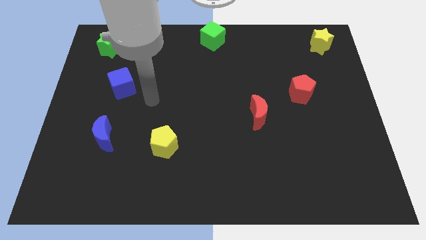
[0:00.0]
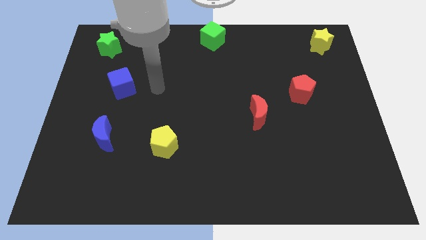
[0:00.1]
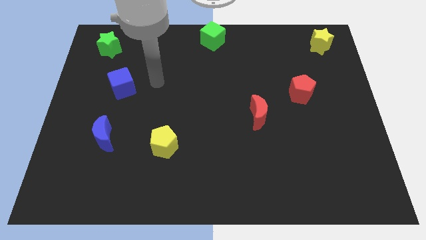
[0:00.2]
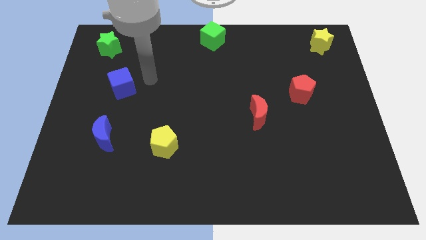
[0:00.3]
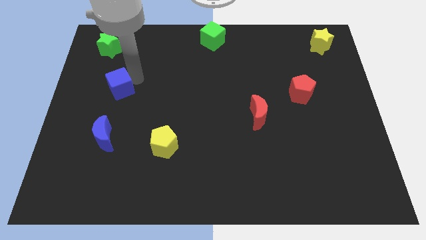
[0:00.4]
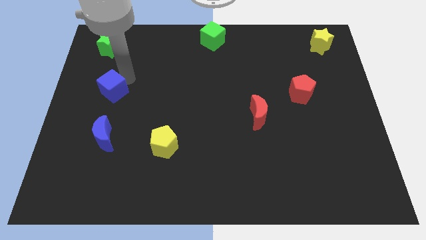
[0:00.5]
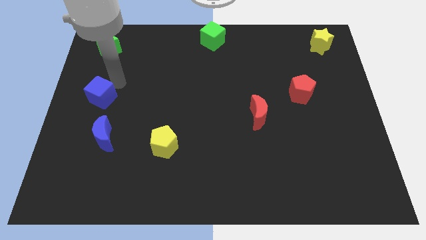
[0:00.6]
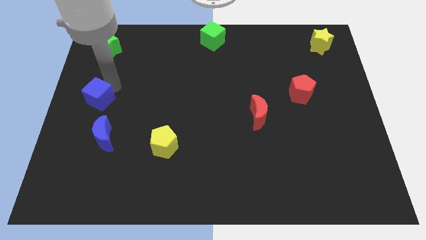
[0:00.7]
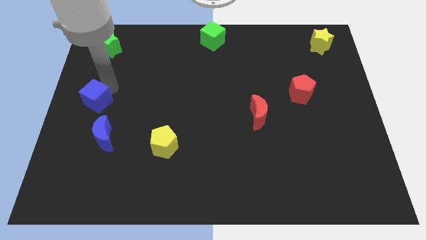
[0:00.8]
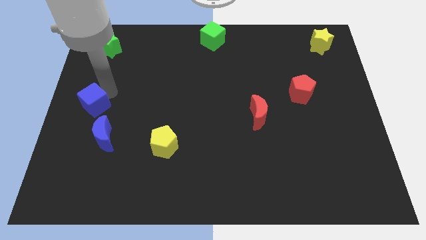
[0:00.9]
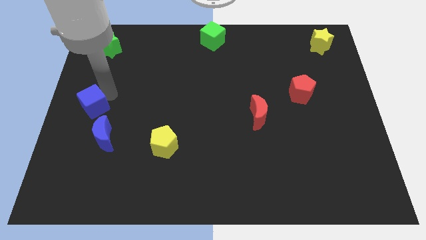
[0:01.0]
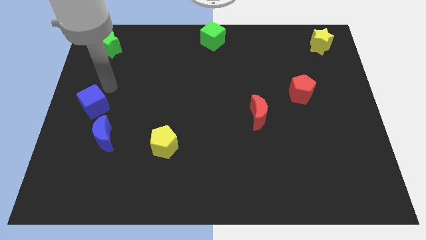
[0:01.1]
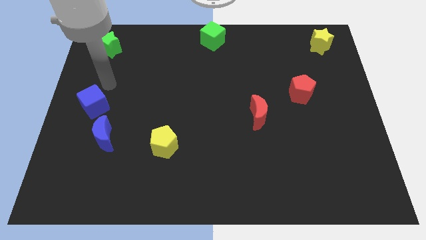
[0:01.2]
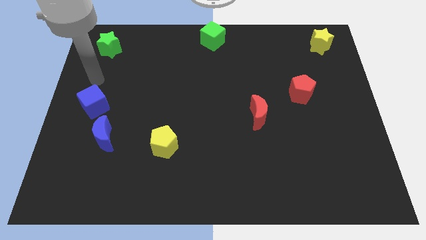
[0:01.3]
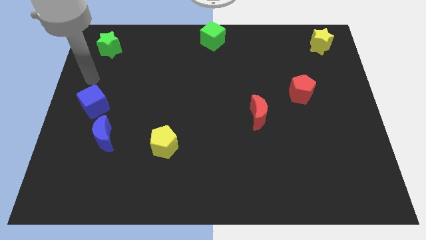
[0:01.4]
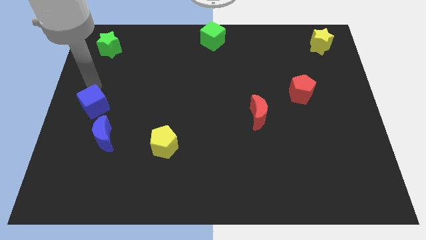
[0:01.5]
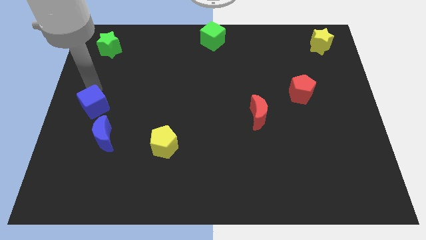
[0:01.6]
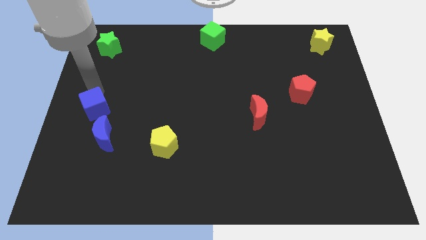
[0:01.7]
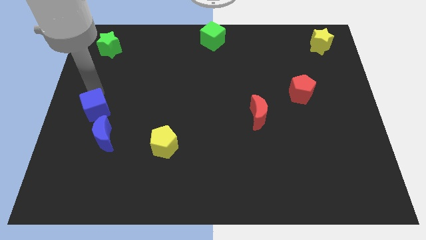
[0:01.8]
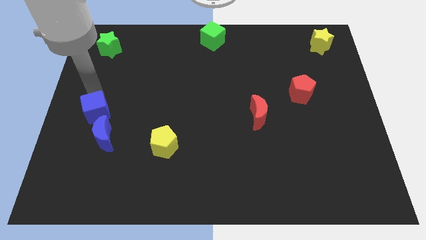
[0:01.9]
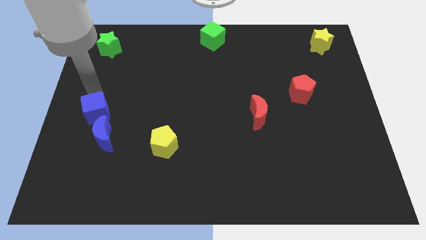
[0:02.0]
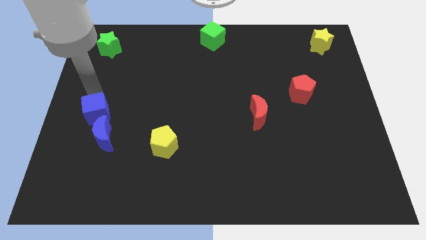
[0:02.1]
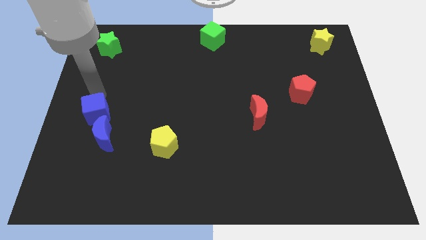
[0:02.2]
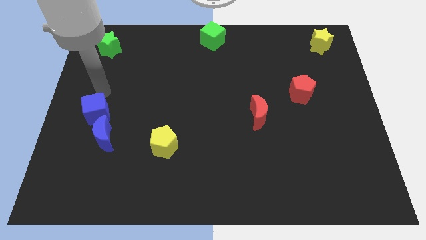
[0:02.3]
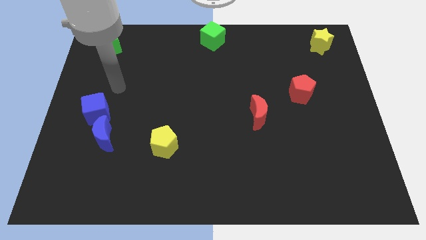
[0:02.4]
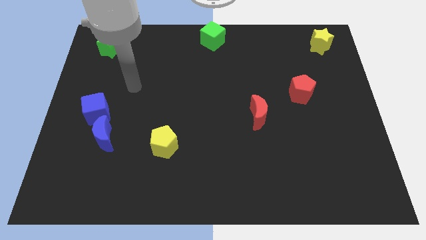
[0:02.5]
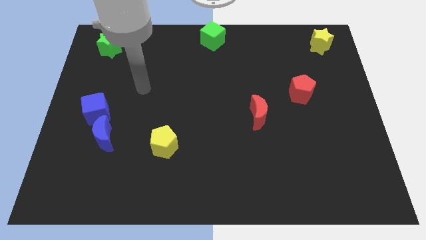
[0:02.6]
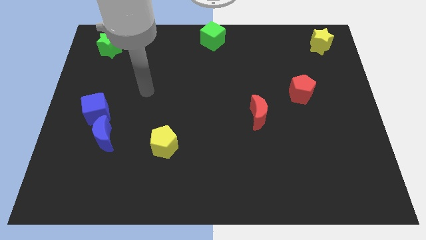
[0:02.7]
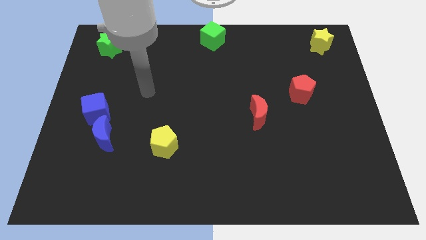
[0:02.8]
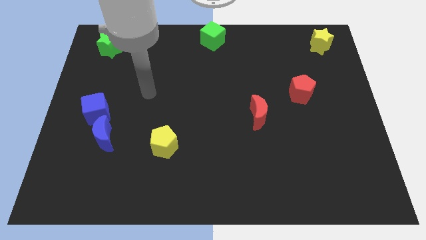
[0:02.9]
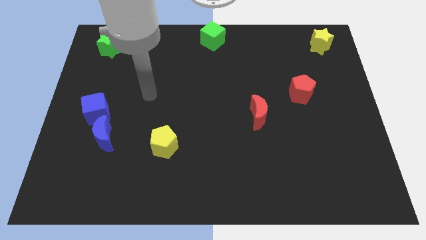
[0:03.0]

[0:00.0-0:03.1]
add blue cube into blue moon

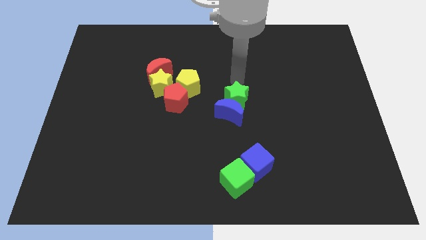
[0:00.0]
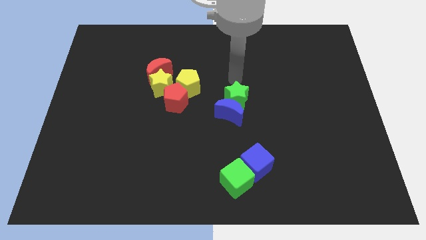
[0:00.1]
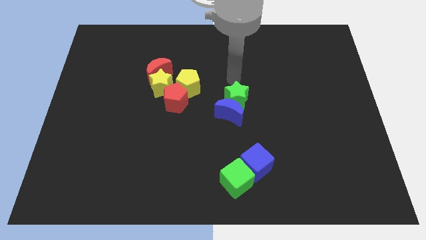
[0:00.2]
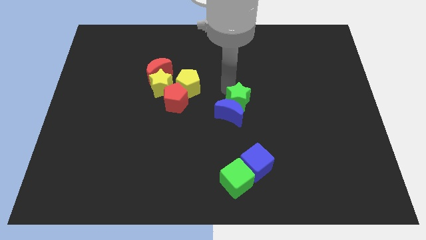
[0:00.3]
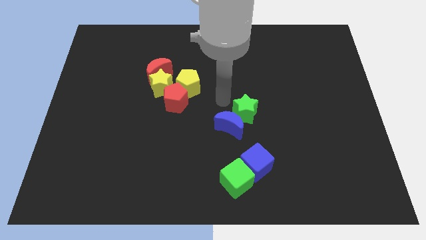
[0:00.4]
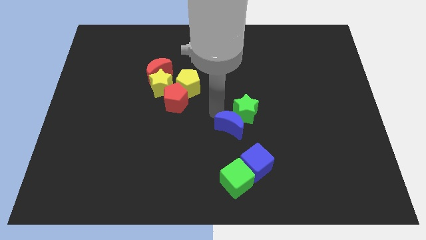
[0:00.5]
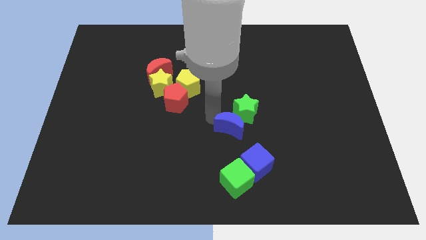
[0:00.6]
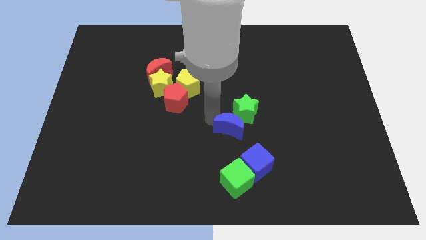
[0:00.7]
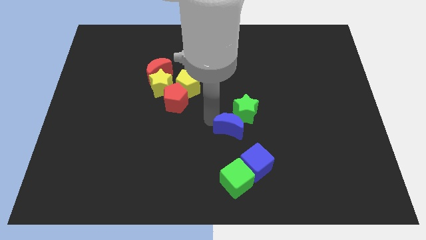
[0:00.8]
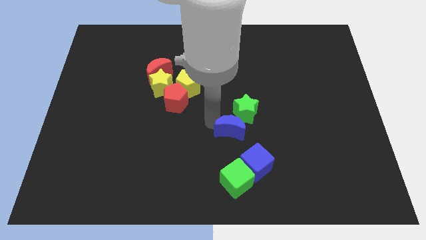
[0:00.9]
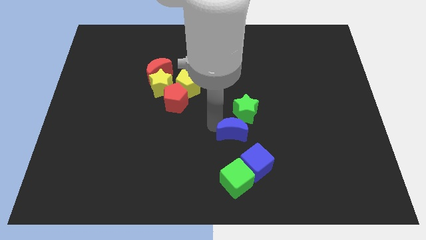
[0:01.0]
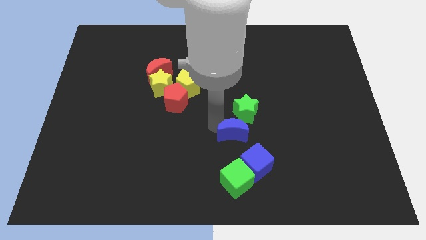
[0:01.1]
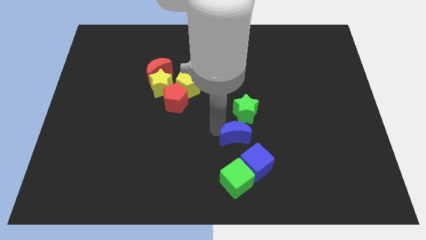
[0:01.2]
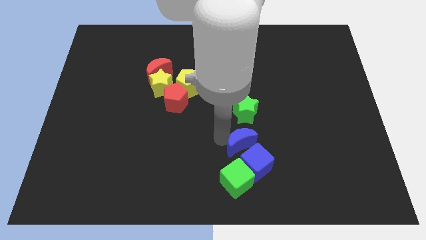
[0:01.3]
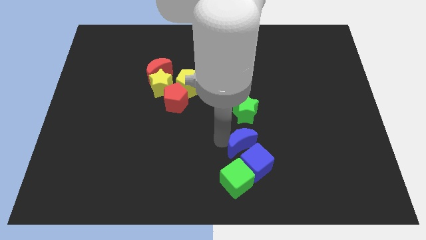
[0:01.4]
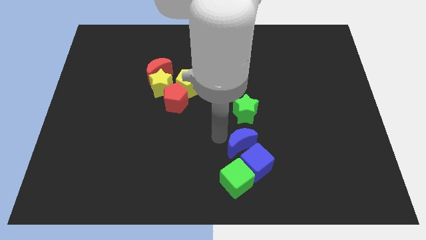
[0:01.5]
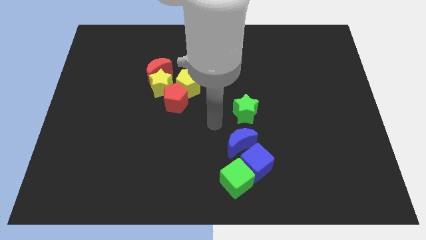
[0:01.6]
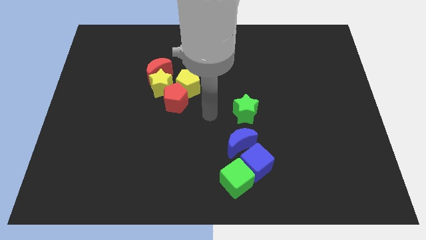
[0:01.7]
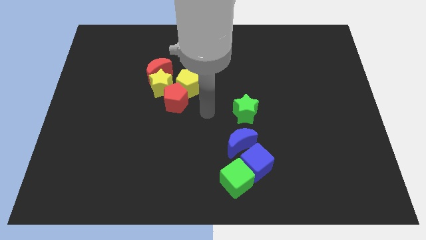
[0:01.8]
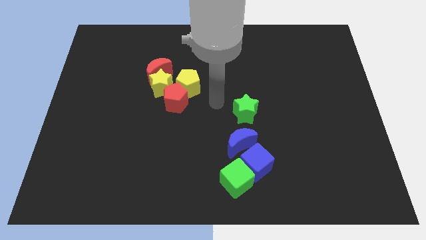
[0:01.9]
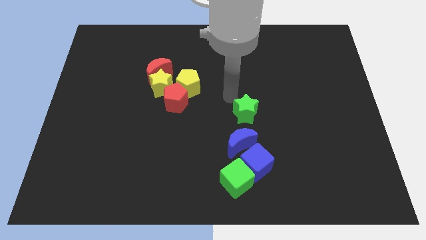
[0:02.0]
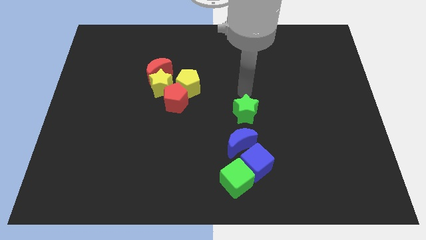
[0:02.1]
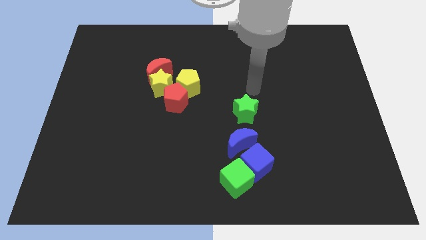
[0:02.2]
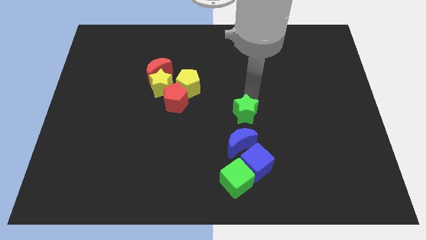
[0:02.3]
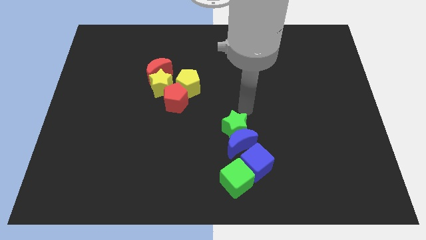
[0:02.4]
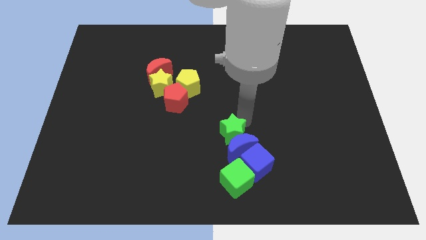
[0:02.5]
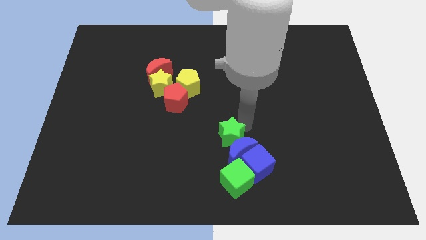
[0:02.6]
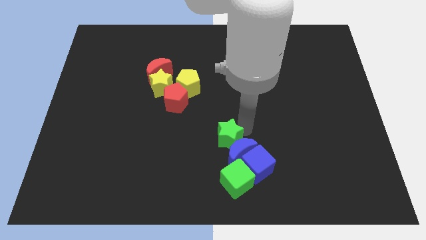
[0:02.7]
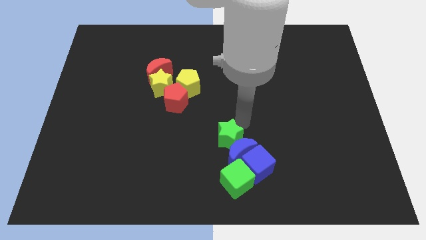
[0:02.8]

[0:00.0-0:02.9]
push the blue crescent and green star into the blue cube

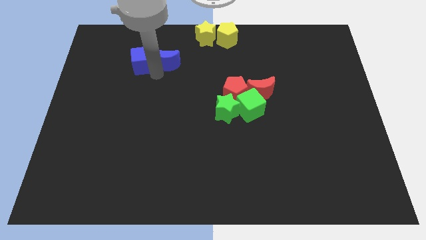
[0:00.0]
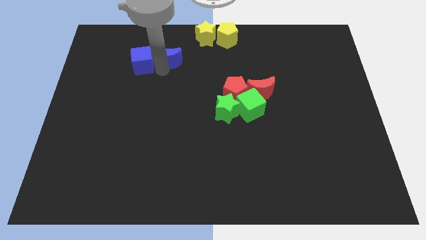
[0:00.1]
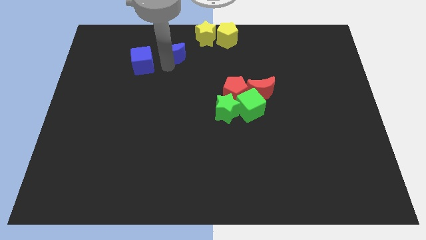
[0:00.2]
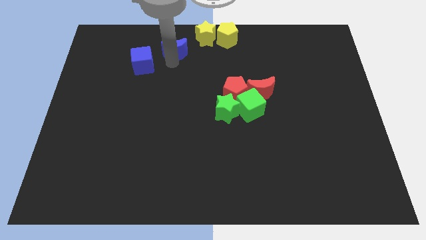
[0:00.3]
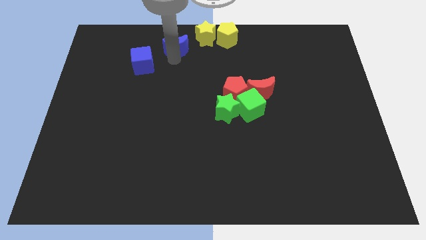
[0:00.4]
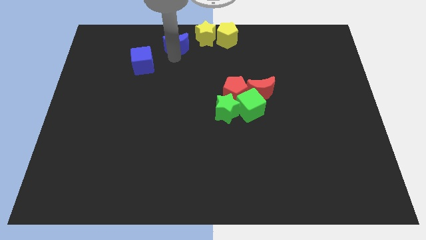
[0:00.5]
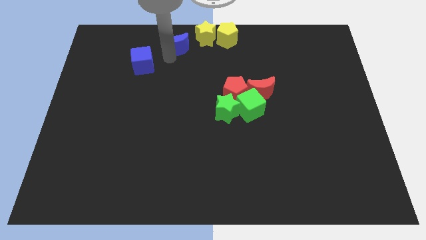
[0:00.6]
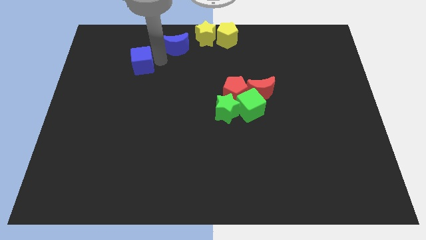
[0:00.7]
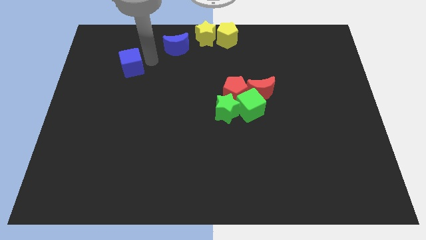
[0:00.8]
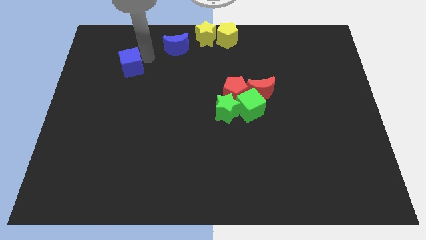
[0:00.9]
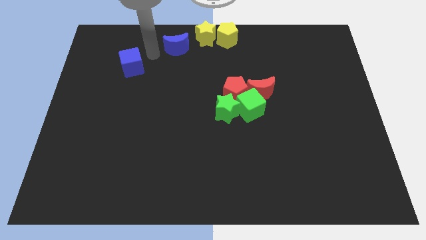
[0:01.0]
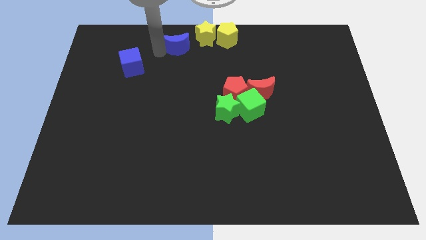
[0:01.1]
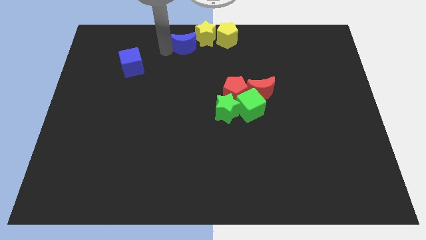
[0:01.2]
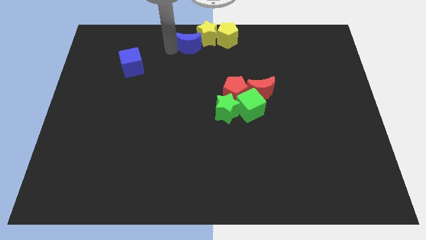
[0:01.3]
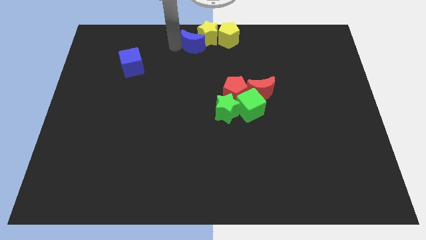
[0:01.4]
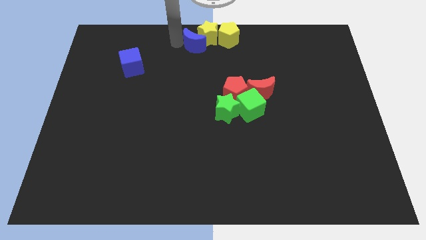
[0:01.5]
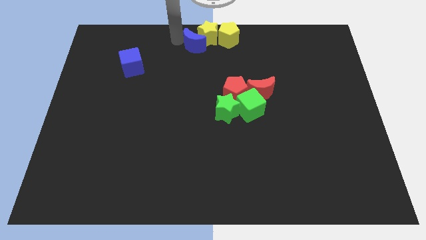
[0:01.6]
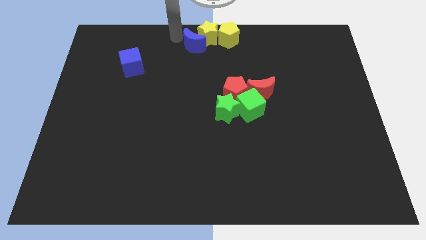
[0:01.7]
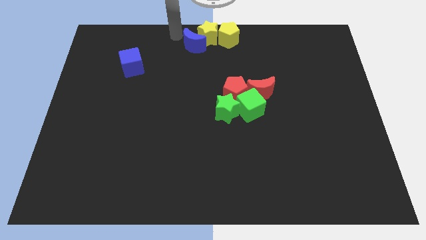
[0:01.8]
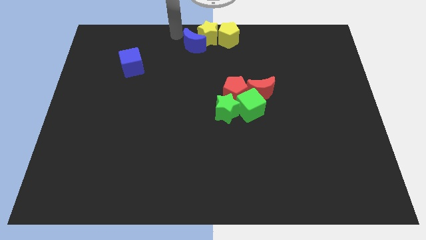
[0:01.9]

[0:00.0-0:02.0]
place blue crescent near yellow star

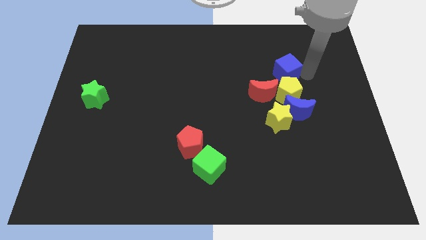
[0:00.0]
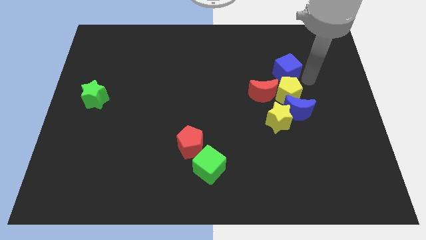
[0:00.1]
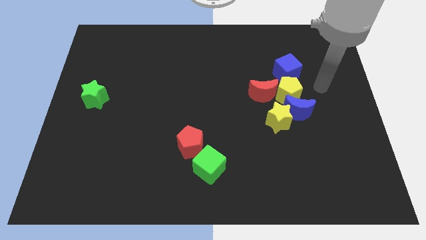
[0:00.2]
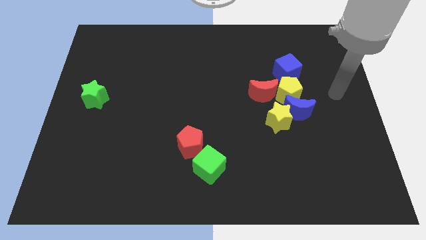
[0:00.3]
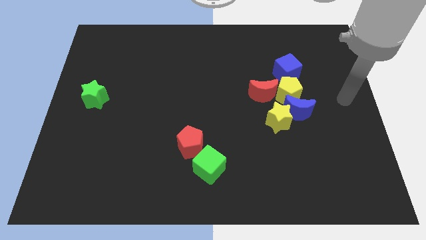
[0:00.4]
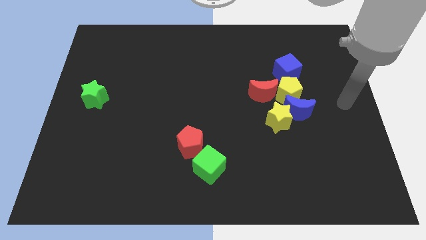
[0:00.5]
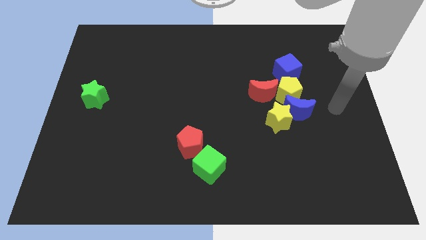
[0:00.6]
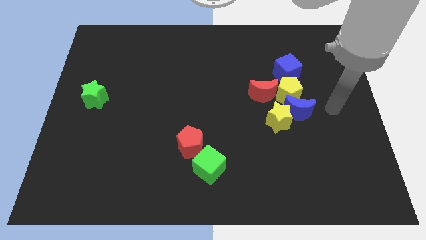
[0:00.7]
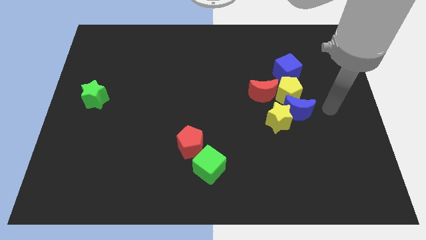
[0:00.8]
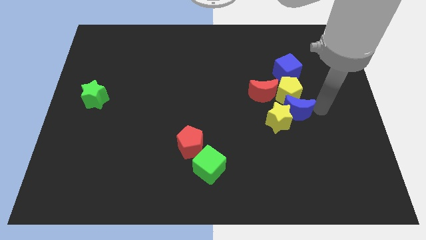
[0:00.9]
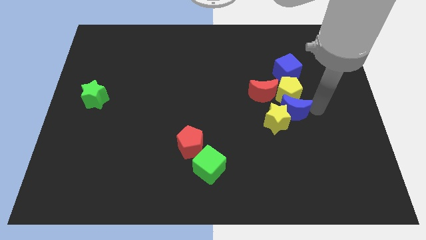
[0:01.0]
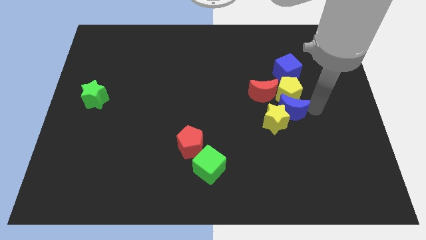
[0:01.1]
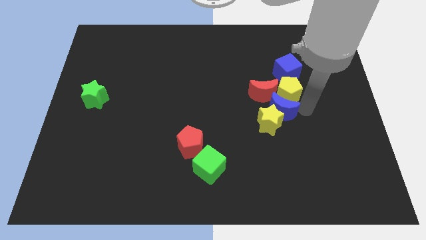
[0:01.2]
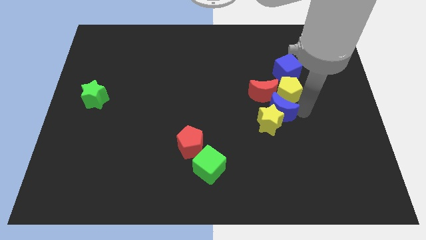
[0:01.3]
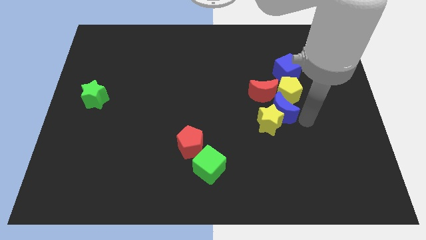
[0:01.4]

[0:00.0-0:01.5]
place blue moon to the bottom of yellow pentagon
